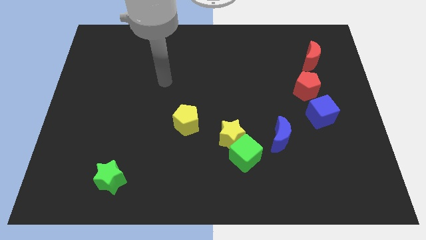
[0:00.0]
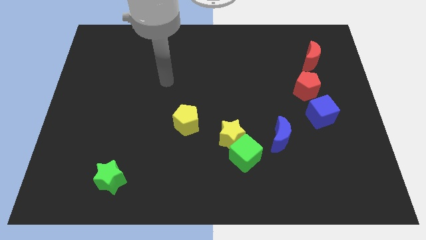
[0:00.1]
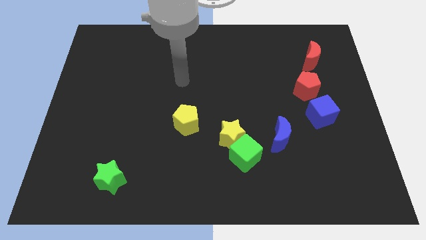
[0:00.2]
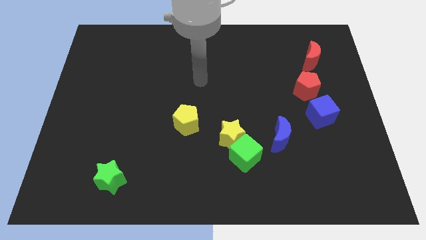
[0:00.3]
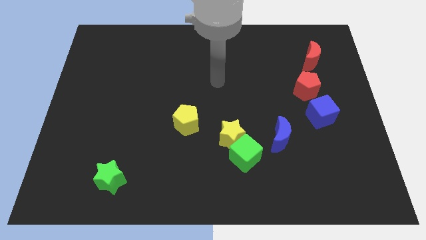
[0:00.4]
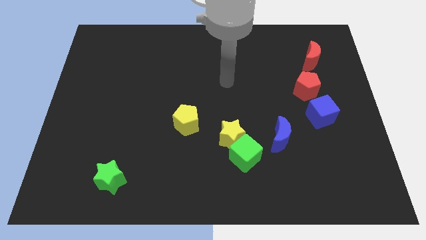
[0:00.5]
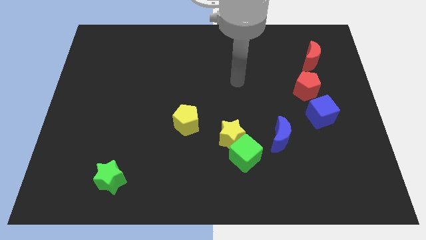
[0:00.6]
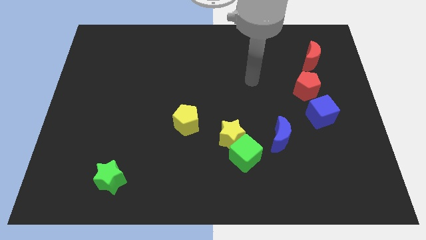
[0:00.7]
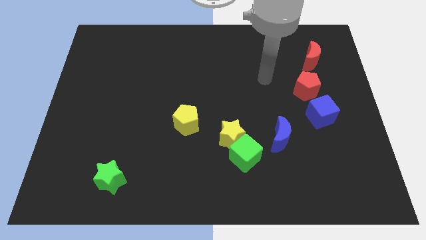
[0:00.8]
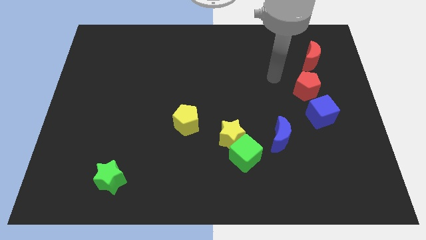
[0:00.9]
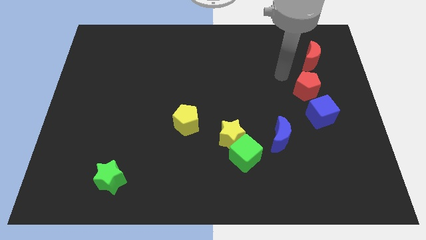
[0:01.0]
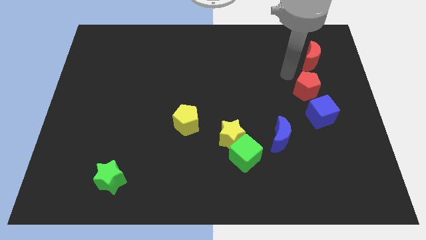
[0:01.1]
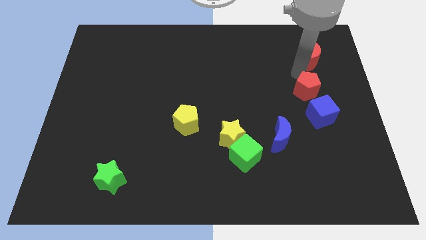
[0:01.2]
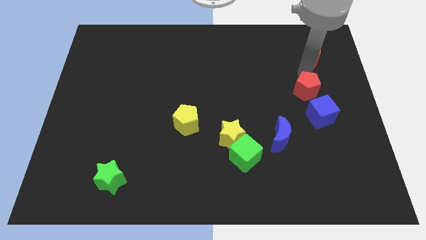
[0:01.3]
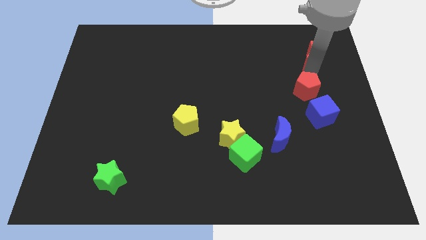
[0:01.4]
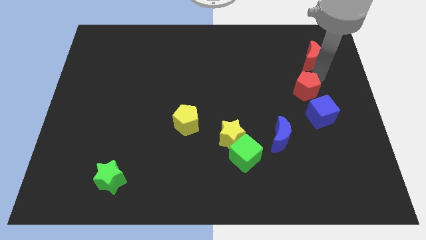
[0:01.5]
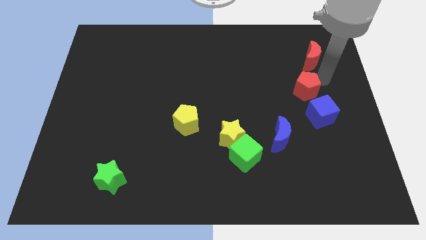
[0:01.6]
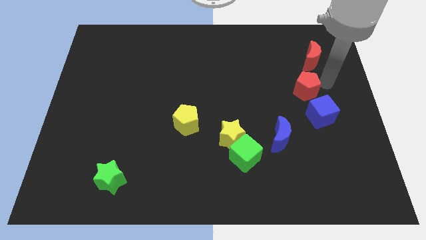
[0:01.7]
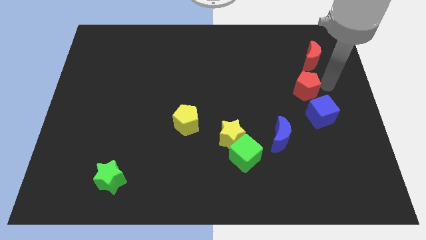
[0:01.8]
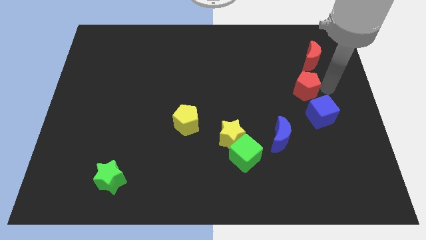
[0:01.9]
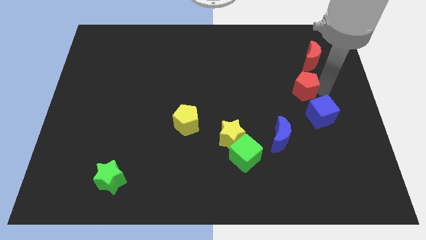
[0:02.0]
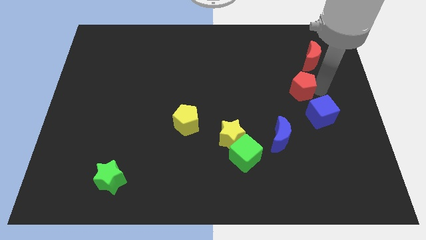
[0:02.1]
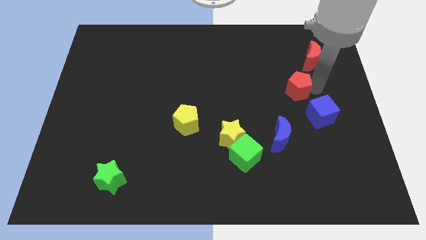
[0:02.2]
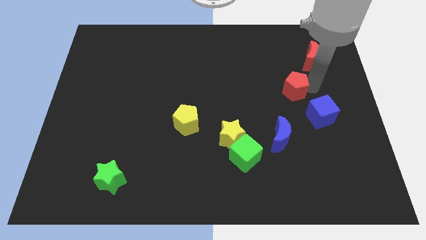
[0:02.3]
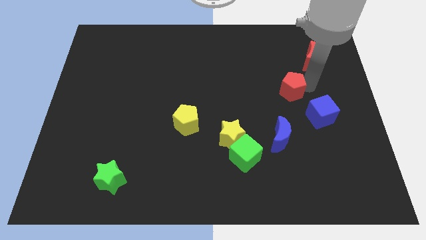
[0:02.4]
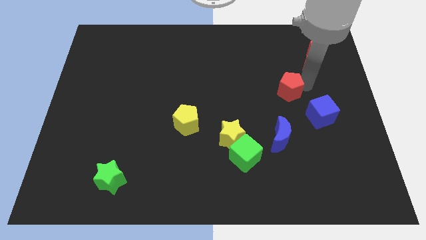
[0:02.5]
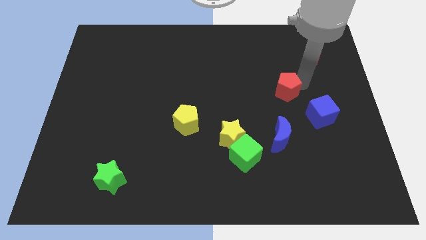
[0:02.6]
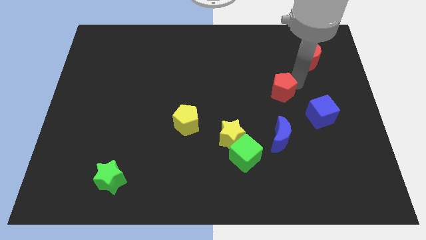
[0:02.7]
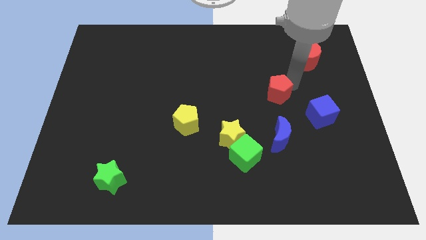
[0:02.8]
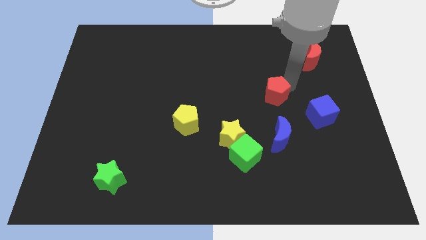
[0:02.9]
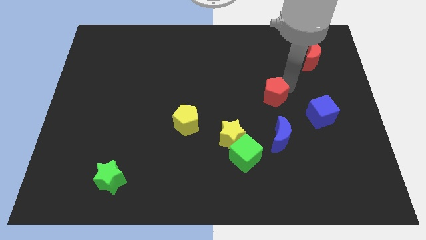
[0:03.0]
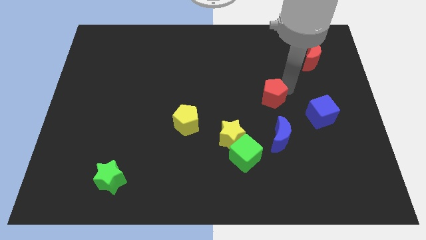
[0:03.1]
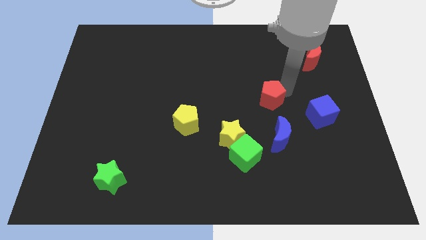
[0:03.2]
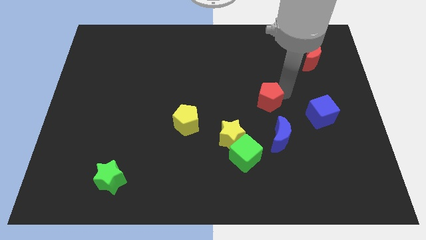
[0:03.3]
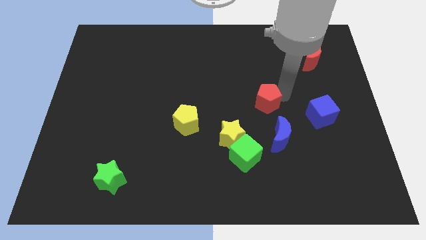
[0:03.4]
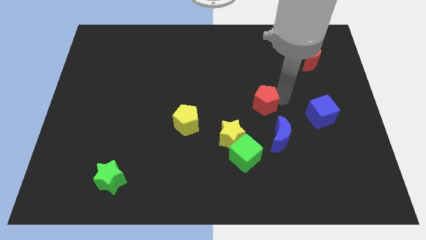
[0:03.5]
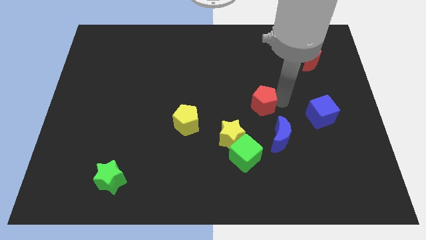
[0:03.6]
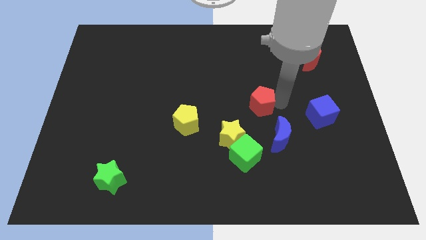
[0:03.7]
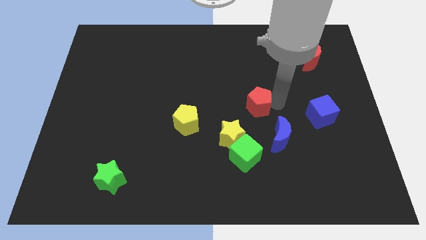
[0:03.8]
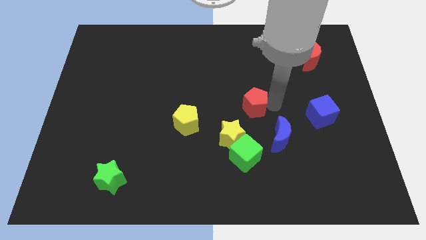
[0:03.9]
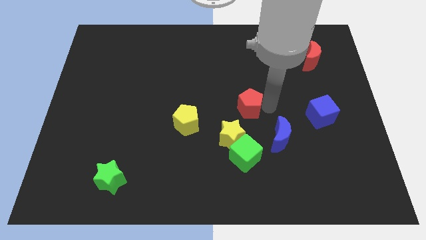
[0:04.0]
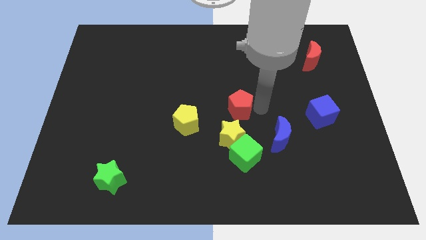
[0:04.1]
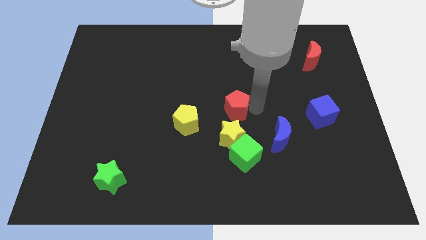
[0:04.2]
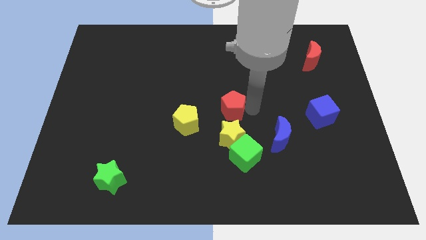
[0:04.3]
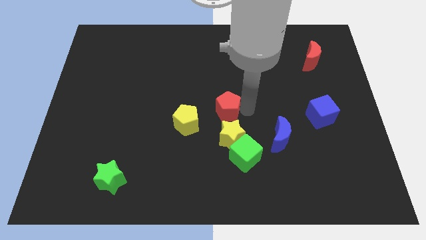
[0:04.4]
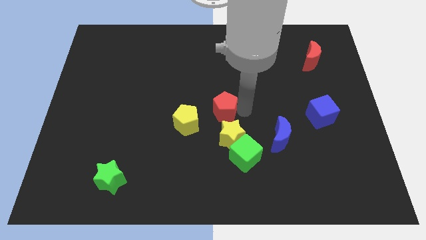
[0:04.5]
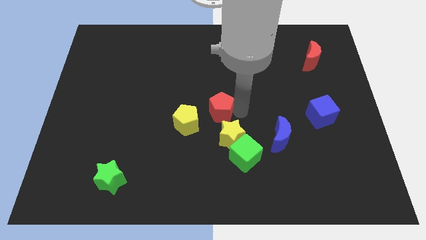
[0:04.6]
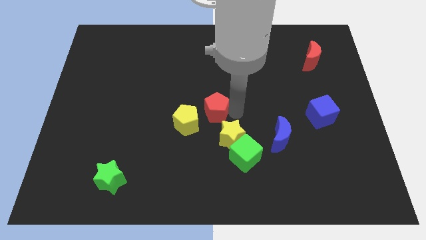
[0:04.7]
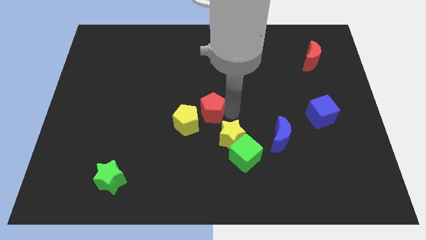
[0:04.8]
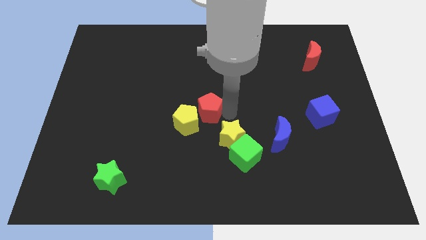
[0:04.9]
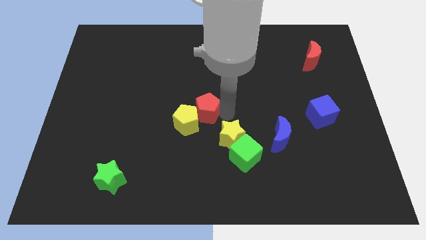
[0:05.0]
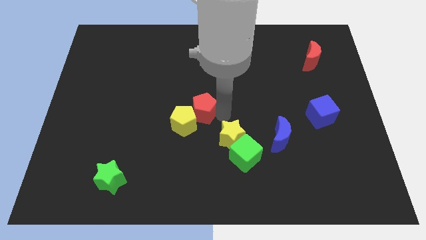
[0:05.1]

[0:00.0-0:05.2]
slide the red pentagon to the yellow pentagon

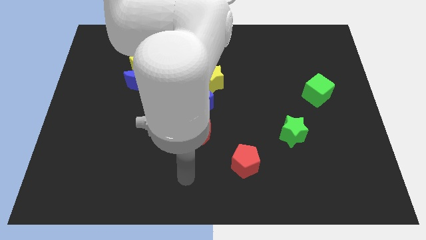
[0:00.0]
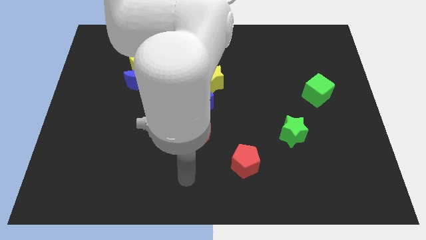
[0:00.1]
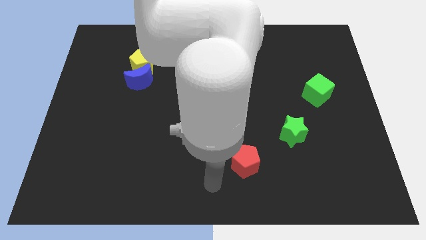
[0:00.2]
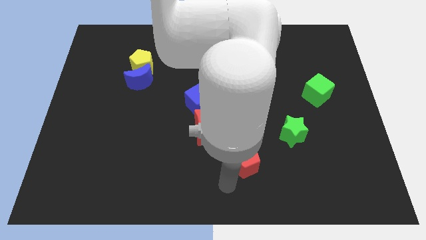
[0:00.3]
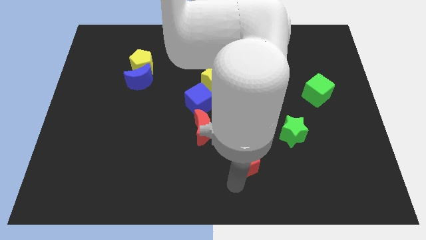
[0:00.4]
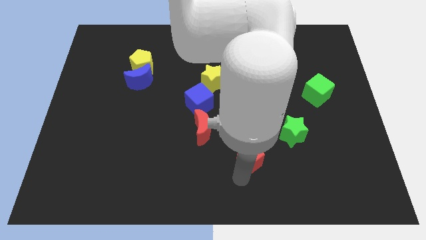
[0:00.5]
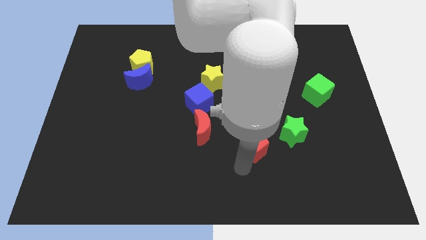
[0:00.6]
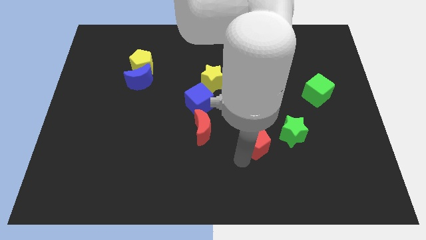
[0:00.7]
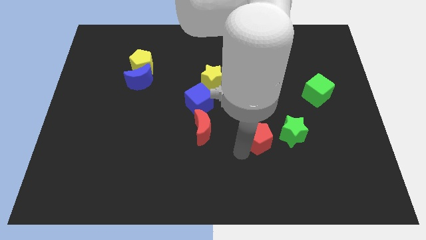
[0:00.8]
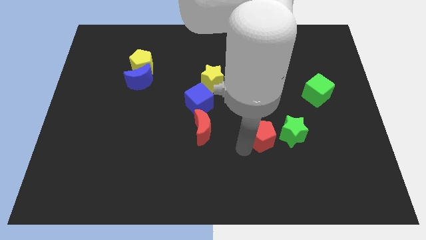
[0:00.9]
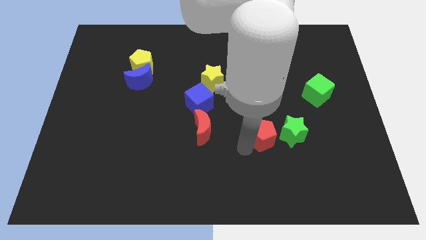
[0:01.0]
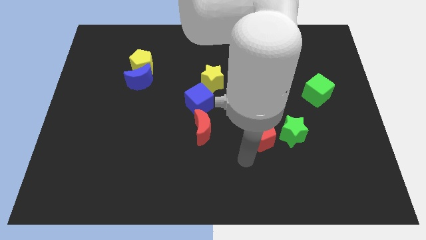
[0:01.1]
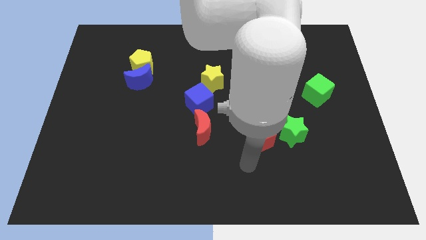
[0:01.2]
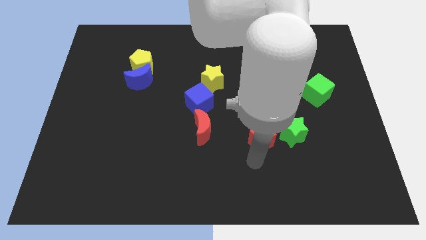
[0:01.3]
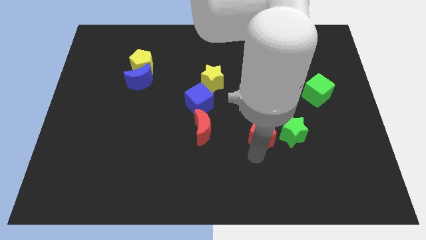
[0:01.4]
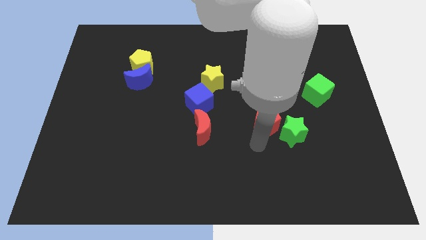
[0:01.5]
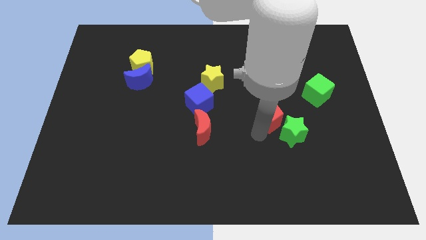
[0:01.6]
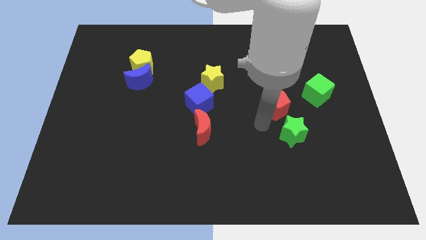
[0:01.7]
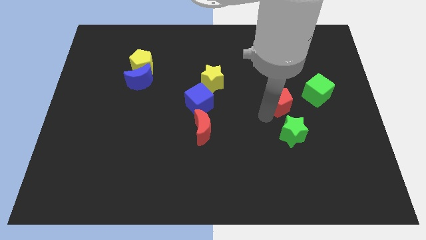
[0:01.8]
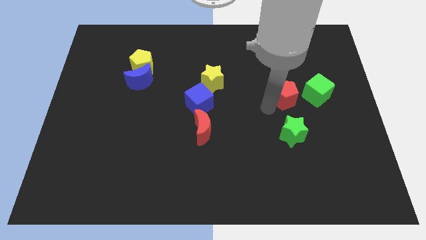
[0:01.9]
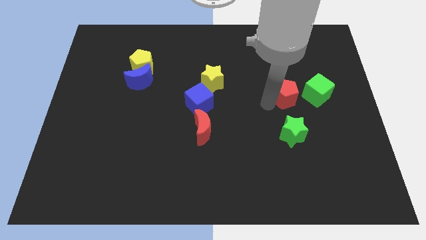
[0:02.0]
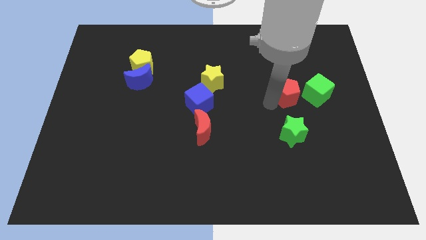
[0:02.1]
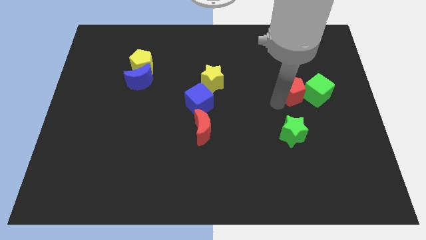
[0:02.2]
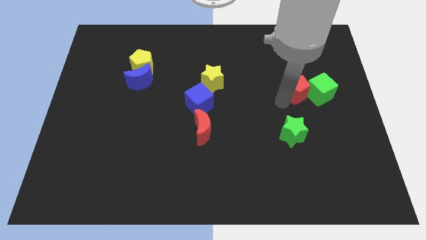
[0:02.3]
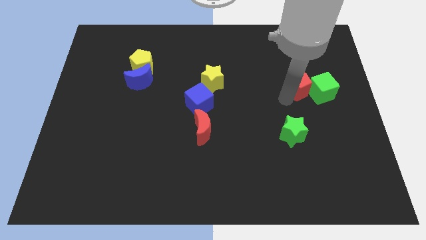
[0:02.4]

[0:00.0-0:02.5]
slide the red pentagon to the green cube

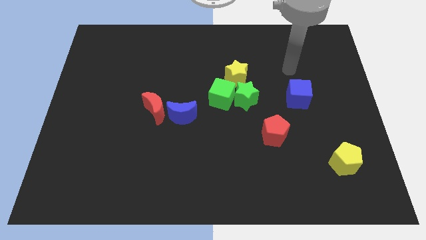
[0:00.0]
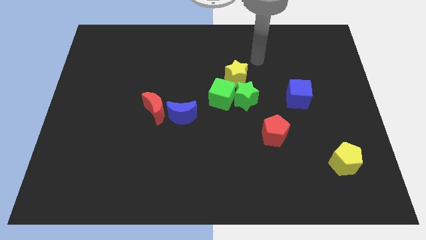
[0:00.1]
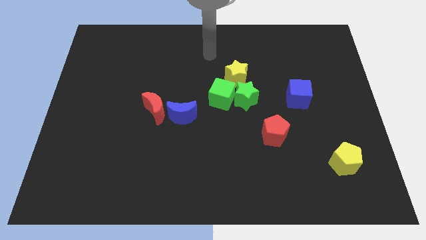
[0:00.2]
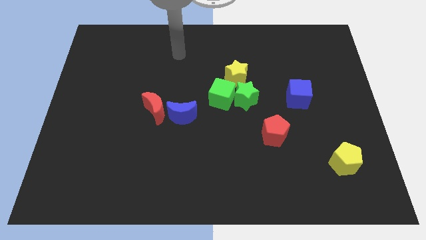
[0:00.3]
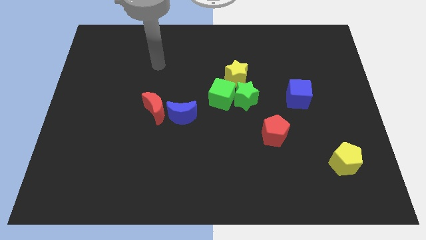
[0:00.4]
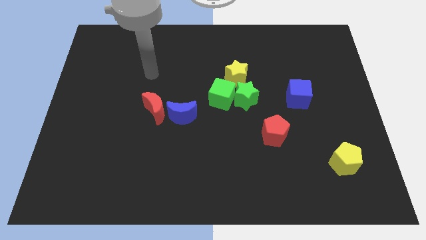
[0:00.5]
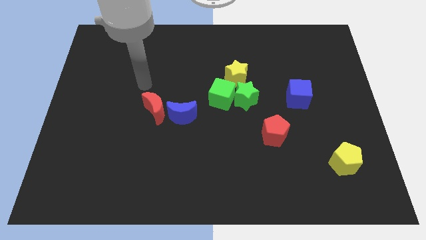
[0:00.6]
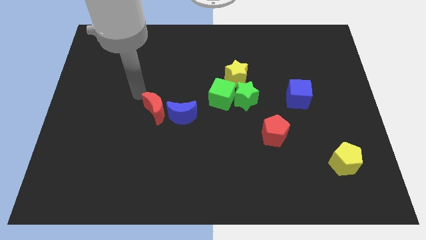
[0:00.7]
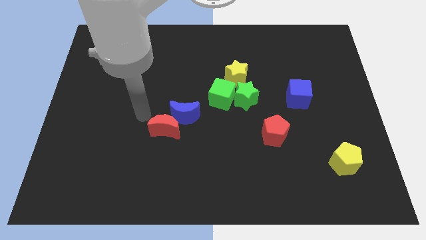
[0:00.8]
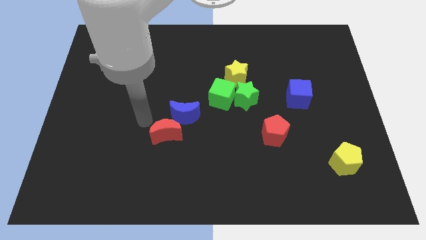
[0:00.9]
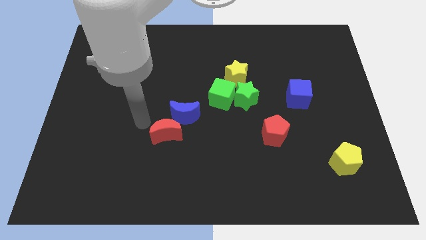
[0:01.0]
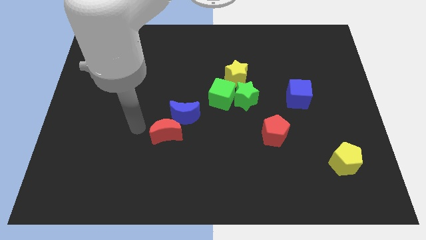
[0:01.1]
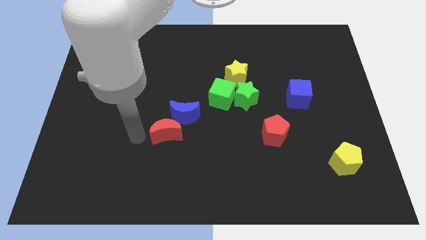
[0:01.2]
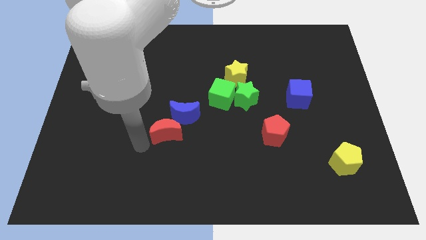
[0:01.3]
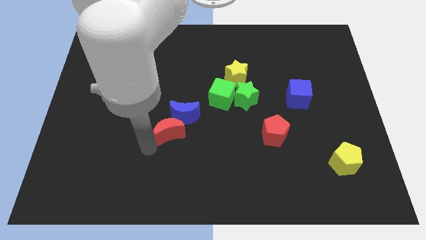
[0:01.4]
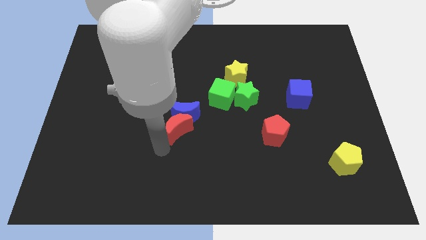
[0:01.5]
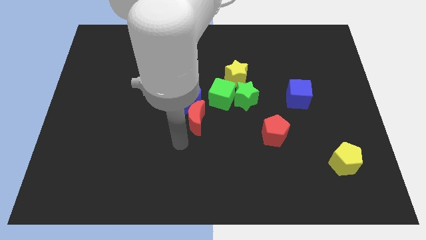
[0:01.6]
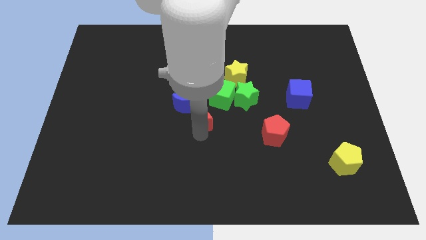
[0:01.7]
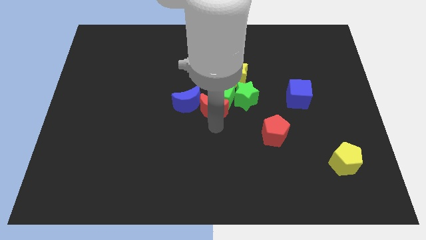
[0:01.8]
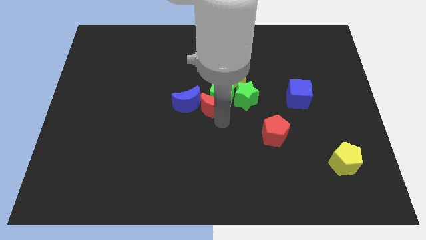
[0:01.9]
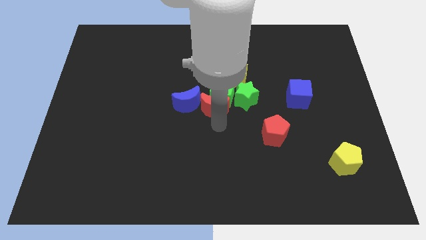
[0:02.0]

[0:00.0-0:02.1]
push the red moon to the green cube
